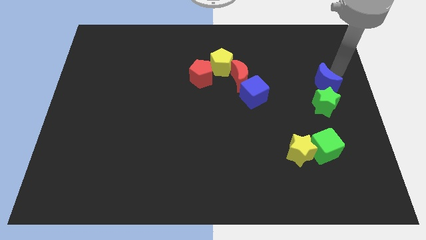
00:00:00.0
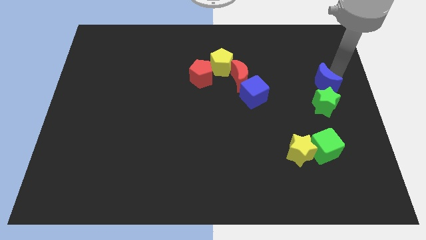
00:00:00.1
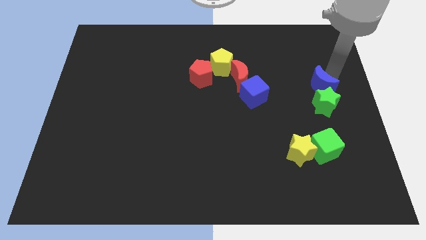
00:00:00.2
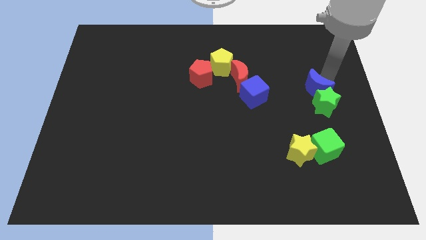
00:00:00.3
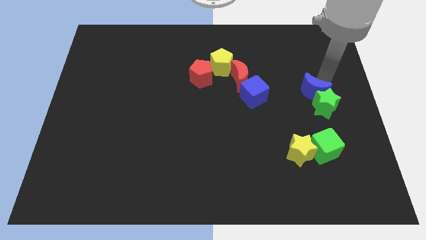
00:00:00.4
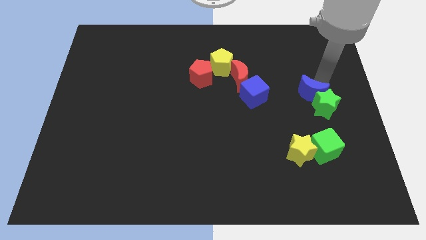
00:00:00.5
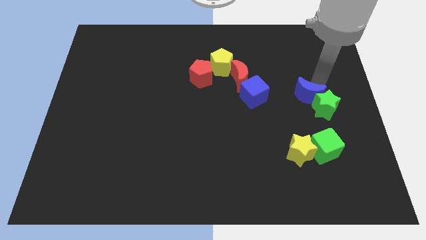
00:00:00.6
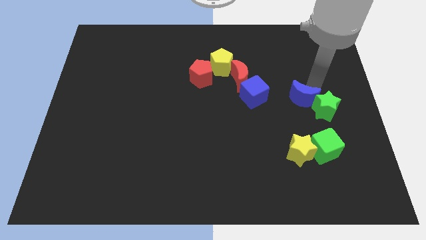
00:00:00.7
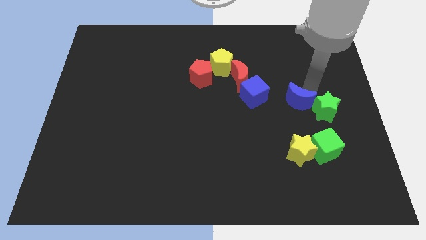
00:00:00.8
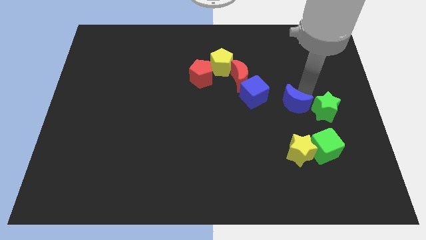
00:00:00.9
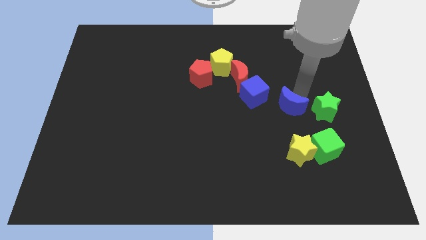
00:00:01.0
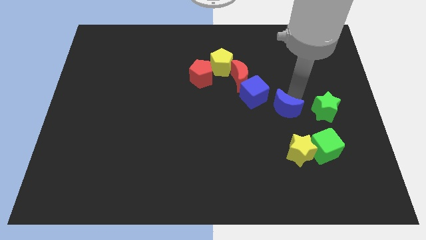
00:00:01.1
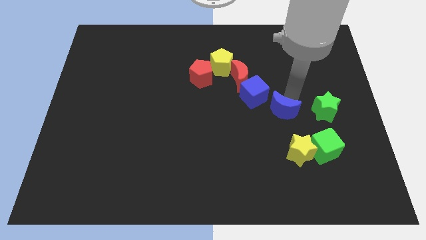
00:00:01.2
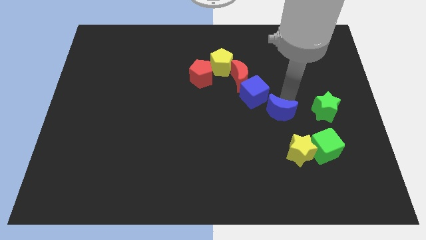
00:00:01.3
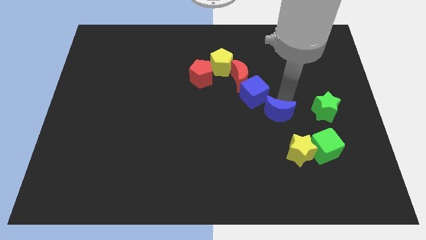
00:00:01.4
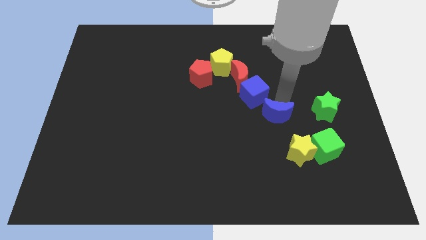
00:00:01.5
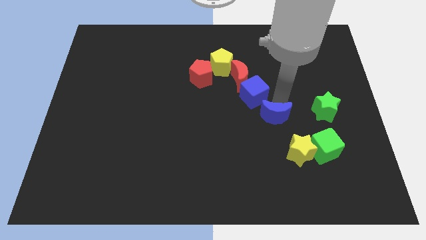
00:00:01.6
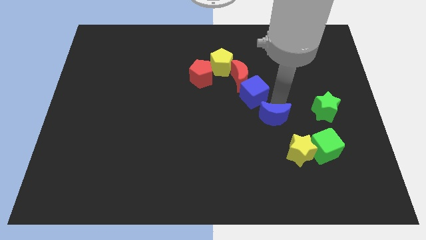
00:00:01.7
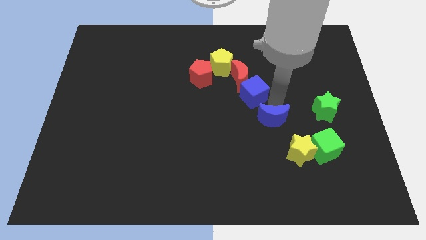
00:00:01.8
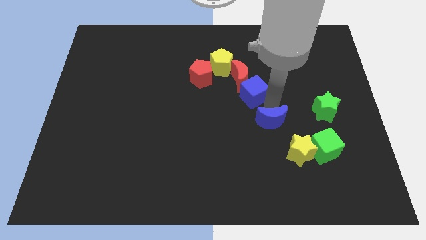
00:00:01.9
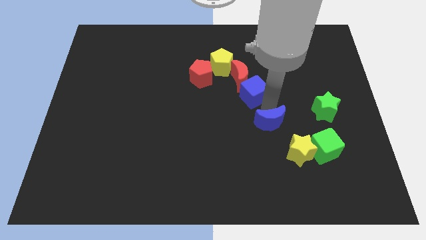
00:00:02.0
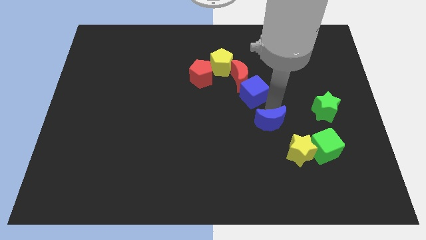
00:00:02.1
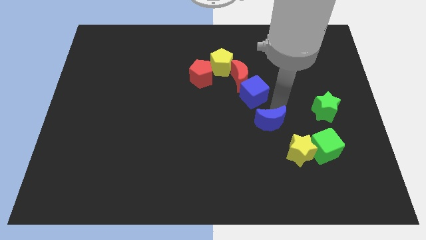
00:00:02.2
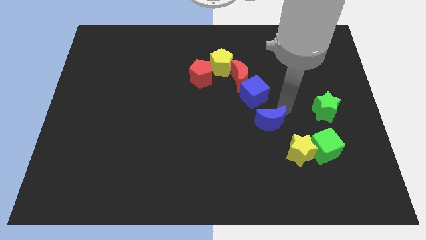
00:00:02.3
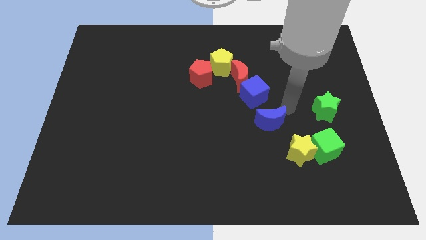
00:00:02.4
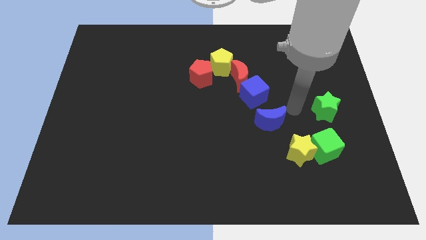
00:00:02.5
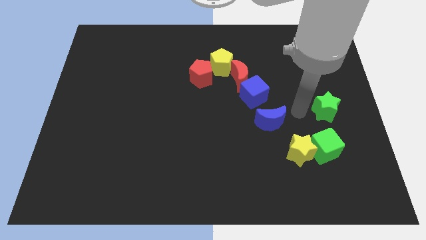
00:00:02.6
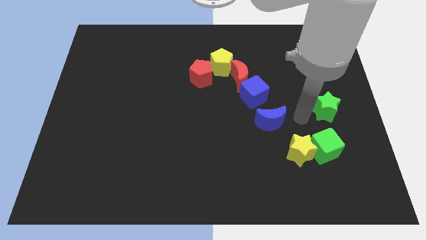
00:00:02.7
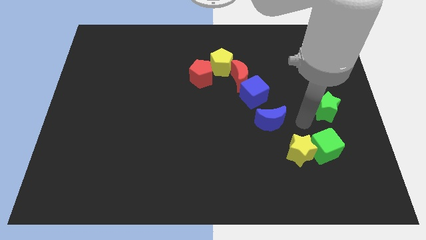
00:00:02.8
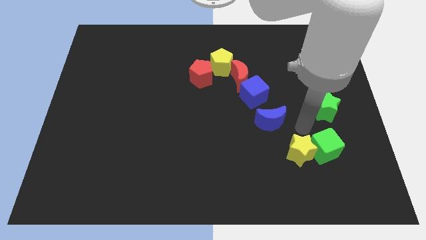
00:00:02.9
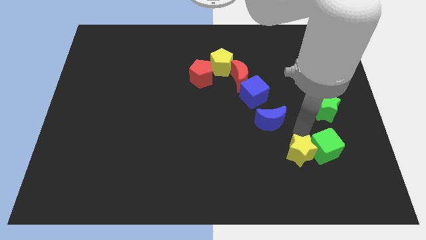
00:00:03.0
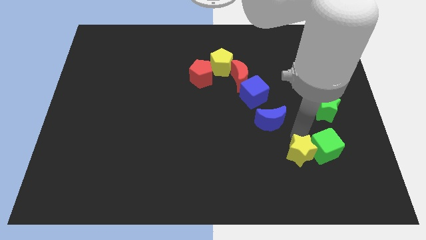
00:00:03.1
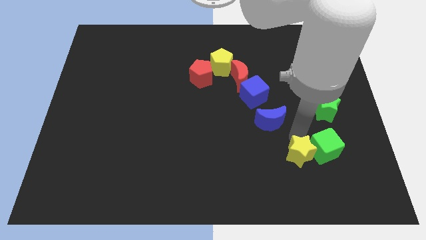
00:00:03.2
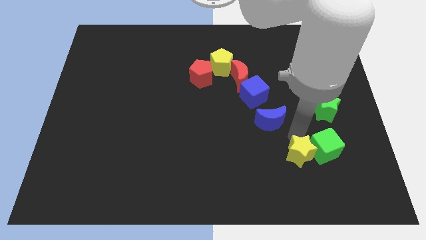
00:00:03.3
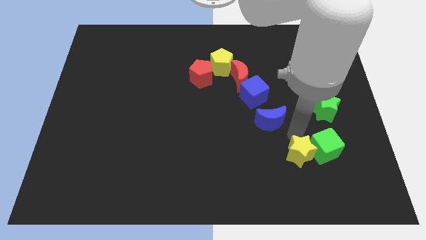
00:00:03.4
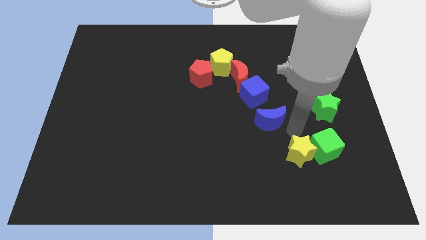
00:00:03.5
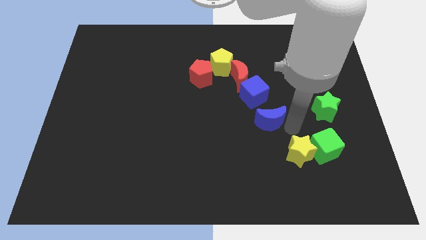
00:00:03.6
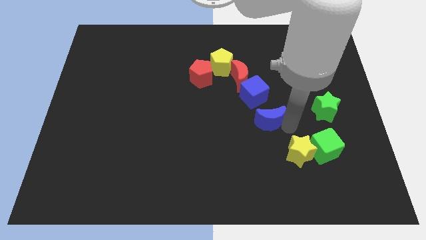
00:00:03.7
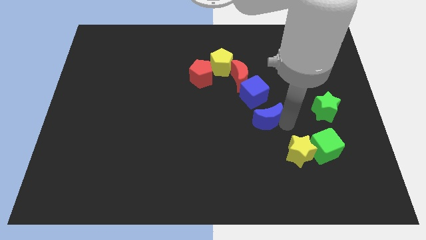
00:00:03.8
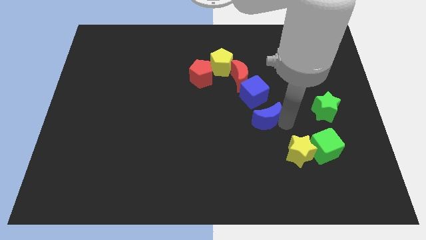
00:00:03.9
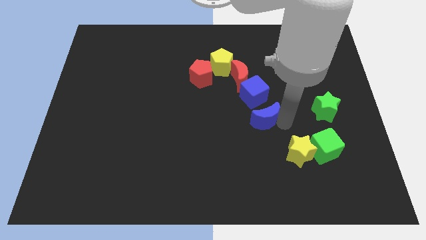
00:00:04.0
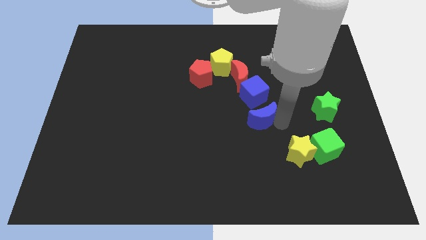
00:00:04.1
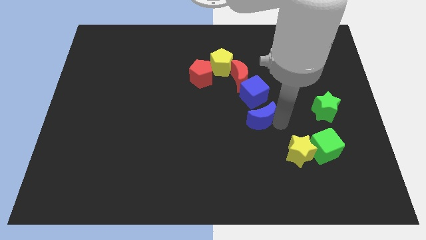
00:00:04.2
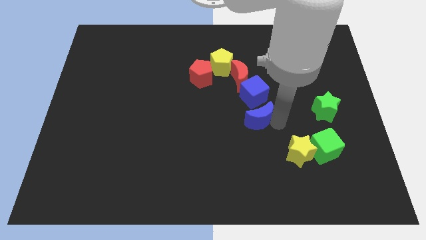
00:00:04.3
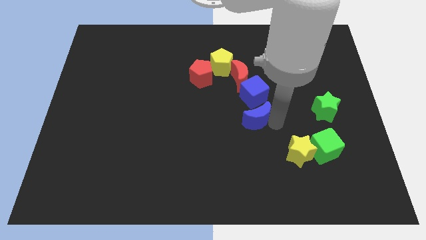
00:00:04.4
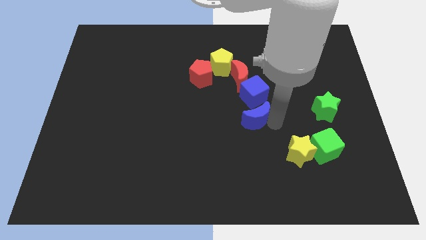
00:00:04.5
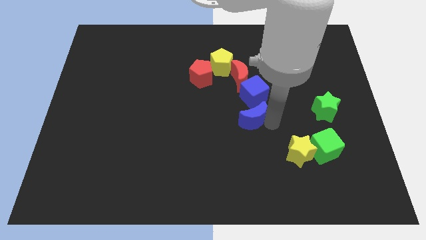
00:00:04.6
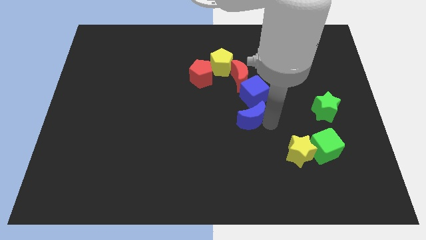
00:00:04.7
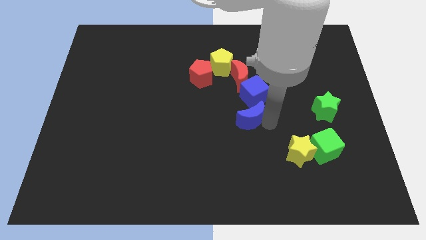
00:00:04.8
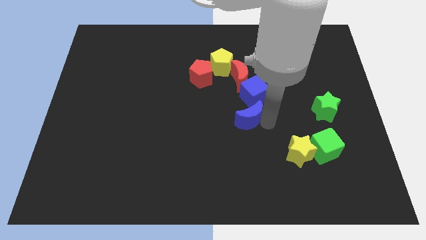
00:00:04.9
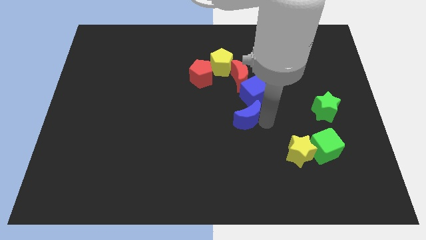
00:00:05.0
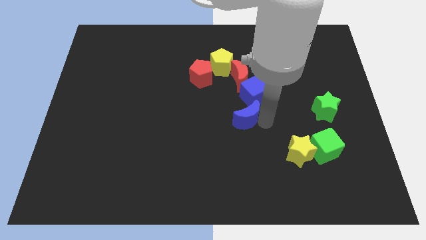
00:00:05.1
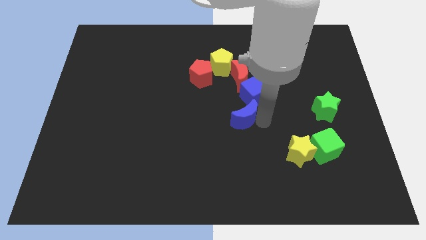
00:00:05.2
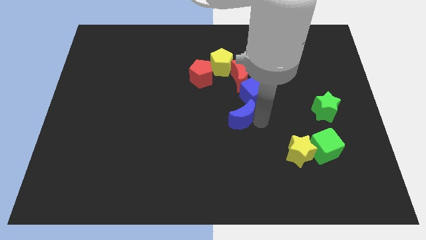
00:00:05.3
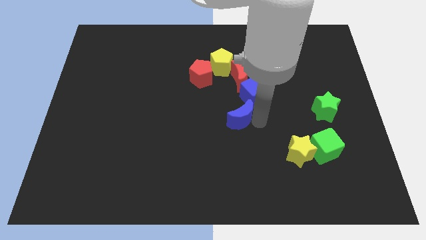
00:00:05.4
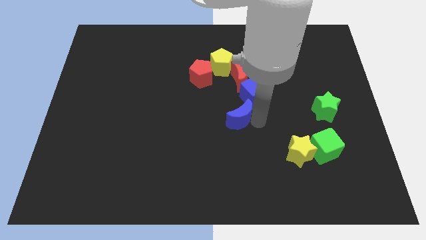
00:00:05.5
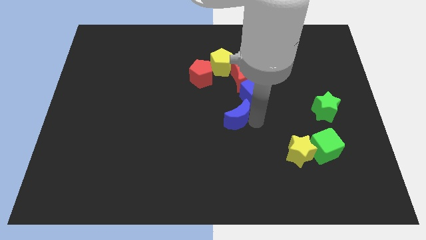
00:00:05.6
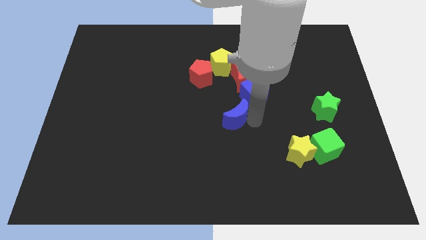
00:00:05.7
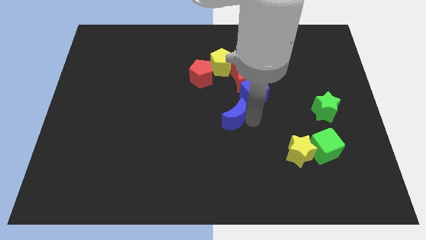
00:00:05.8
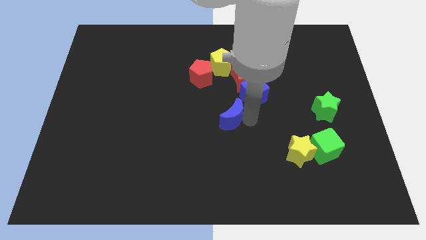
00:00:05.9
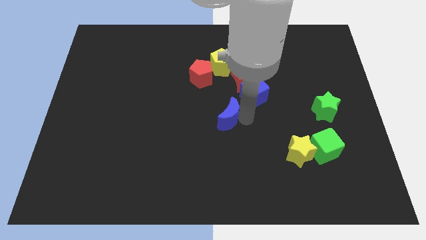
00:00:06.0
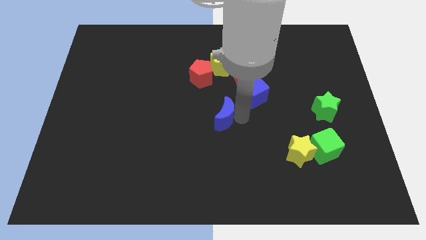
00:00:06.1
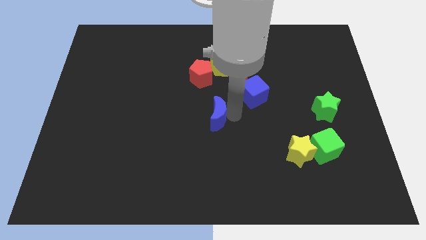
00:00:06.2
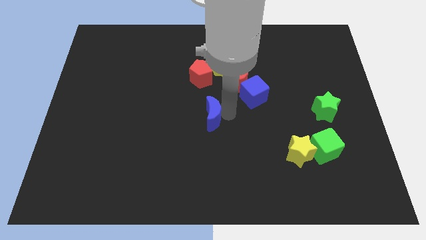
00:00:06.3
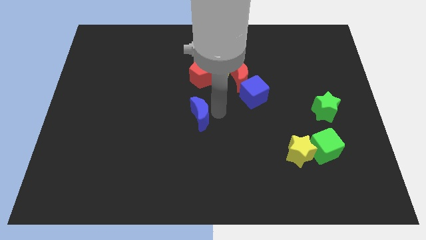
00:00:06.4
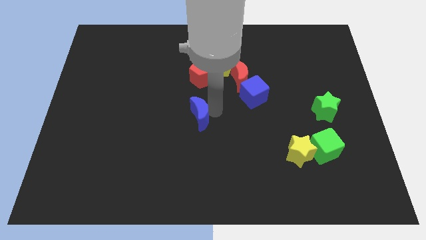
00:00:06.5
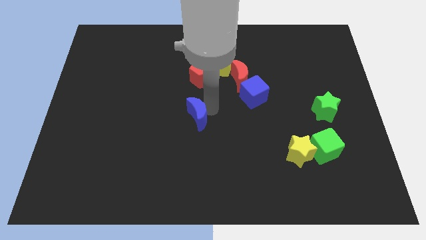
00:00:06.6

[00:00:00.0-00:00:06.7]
move blue crescent to the left of the blue cube

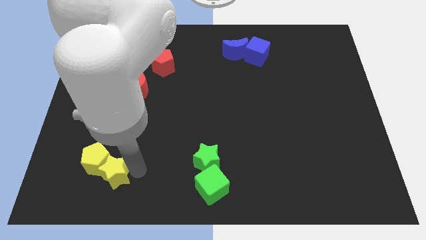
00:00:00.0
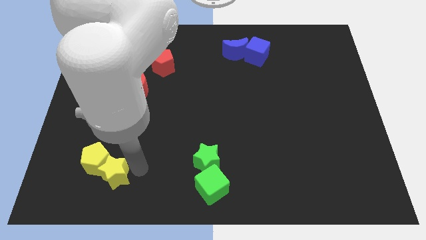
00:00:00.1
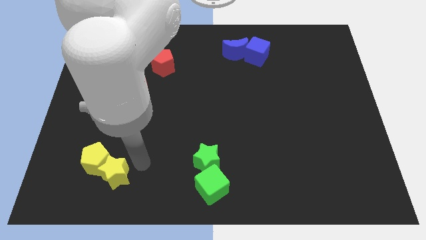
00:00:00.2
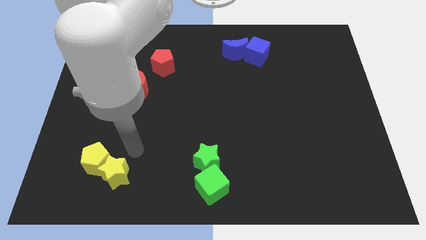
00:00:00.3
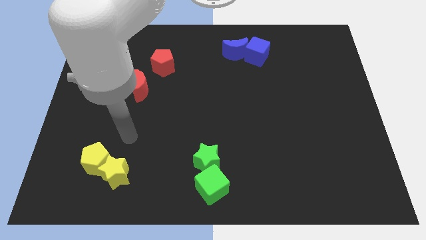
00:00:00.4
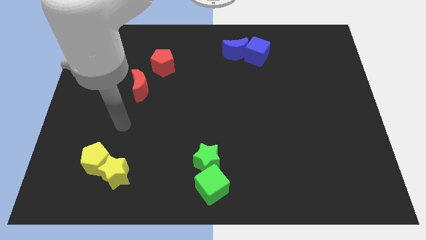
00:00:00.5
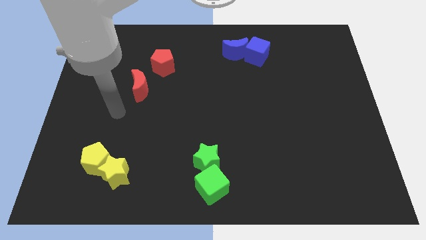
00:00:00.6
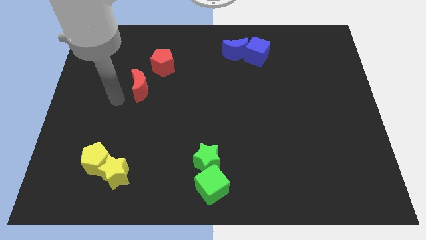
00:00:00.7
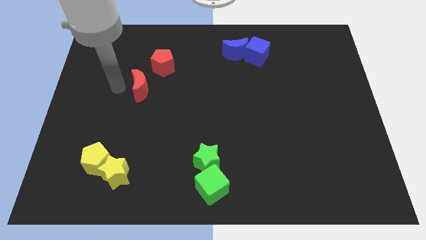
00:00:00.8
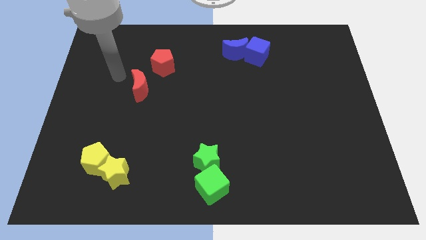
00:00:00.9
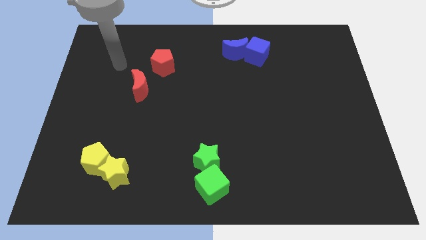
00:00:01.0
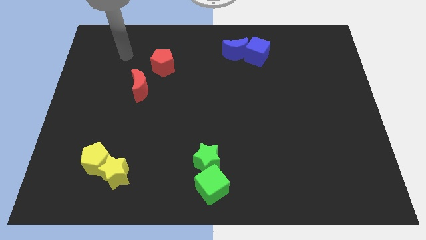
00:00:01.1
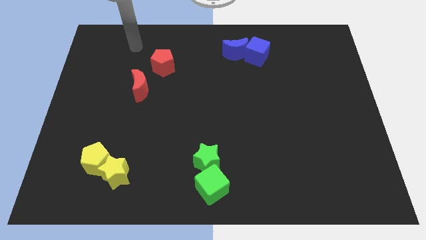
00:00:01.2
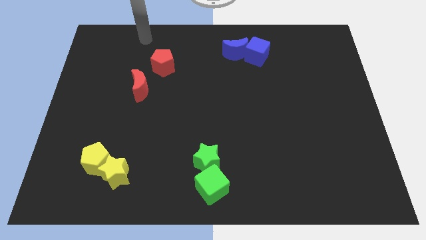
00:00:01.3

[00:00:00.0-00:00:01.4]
move your arm towards the red pentagon

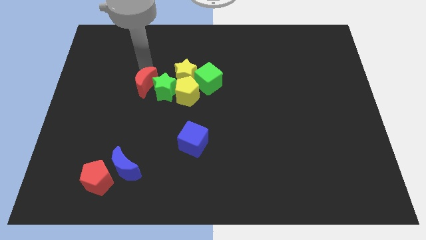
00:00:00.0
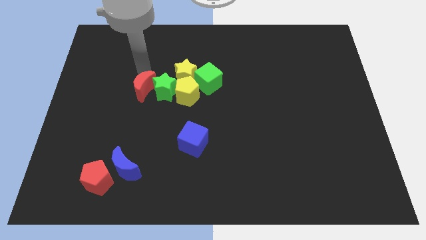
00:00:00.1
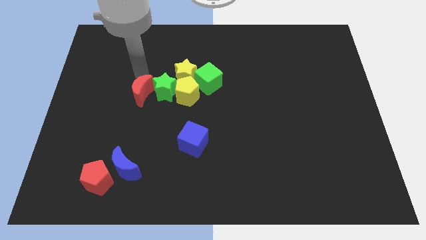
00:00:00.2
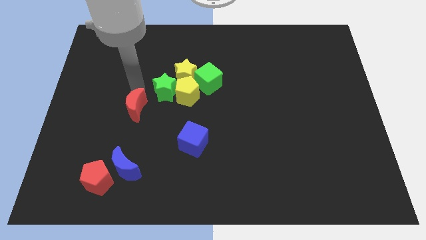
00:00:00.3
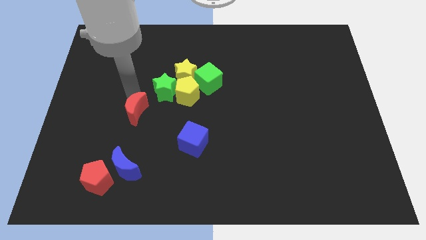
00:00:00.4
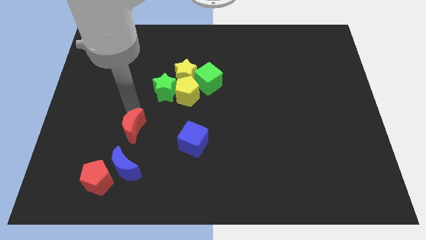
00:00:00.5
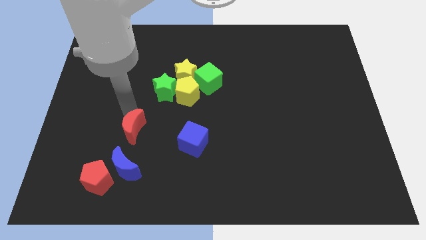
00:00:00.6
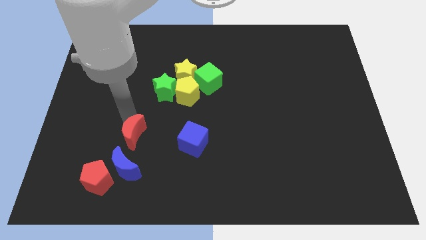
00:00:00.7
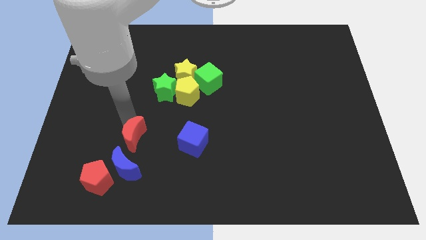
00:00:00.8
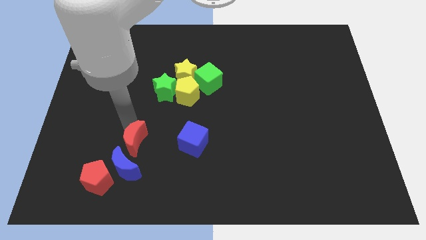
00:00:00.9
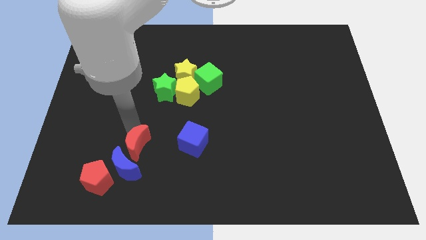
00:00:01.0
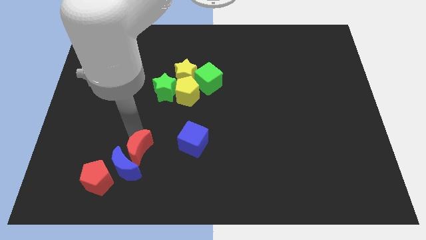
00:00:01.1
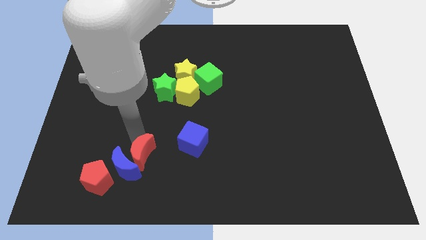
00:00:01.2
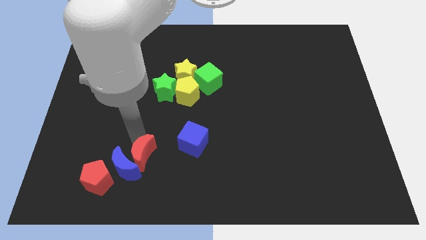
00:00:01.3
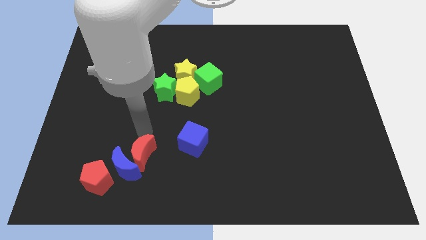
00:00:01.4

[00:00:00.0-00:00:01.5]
move the red moon close to the blue moon
